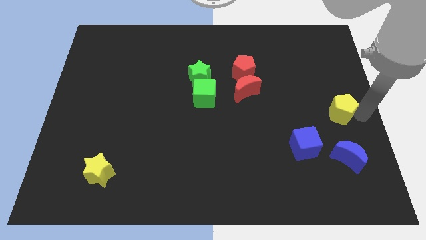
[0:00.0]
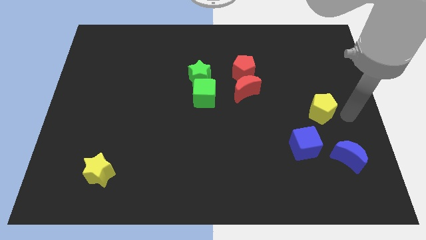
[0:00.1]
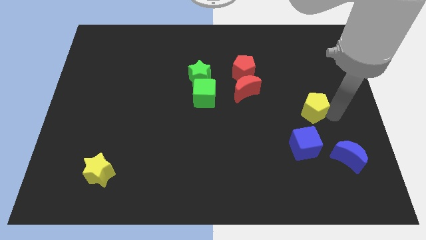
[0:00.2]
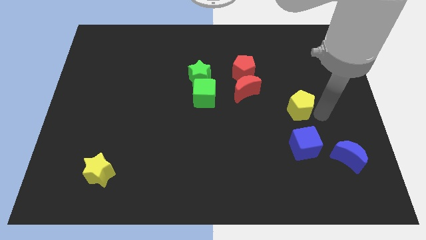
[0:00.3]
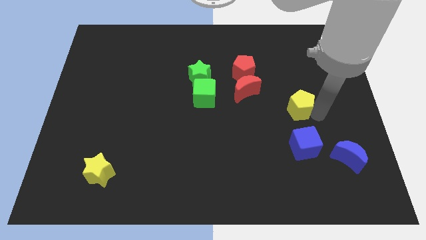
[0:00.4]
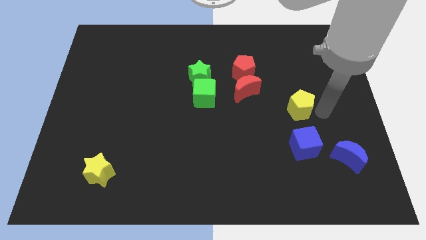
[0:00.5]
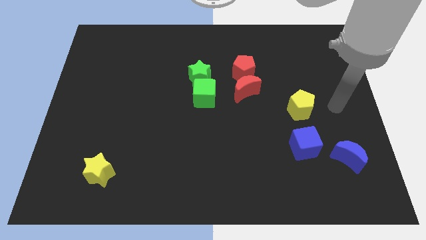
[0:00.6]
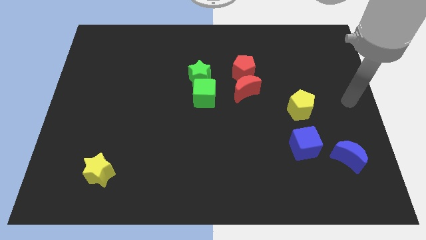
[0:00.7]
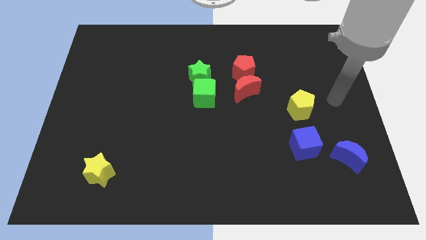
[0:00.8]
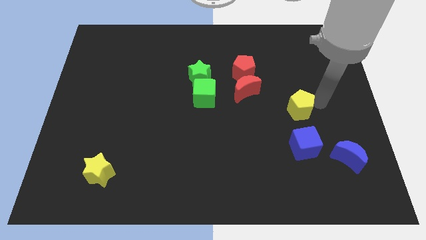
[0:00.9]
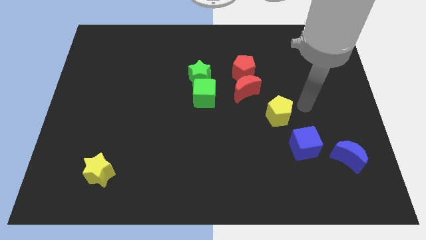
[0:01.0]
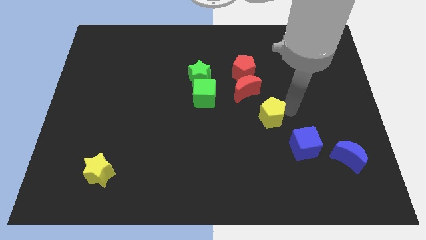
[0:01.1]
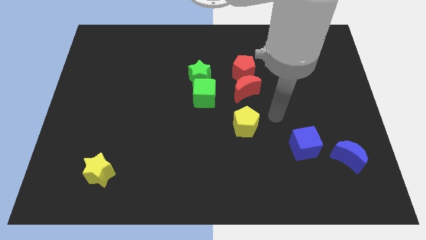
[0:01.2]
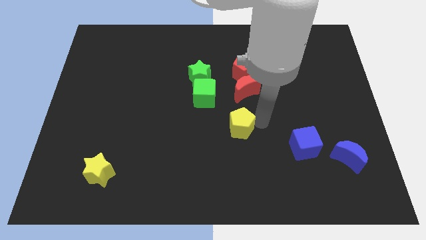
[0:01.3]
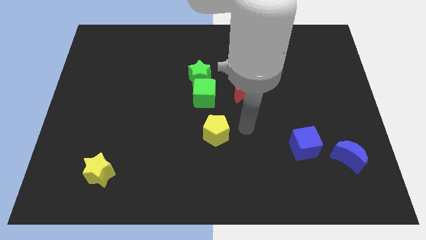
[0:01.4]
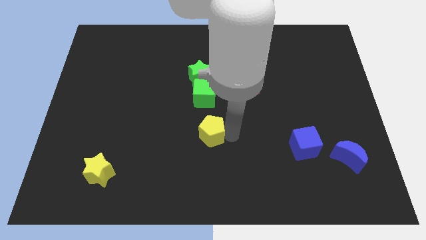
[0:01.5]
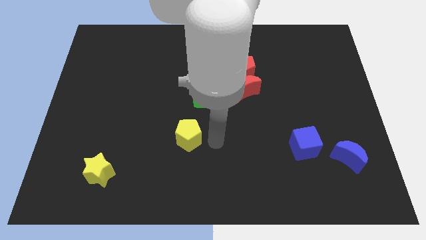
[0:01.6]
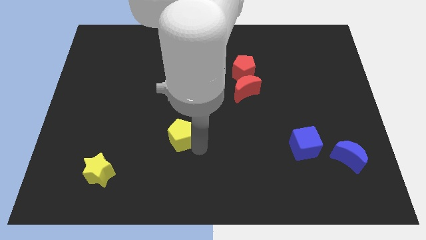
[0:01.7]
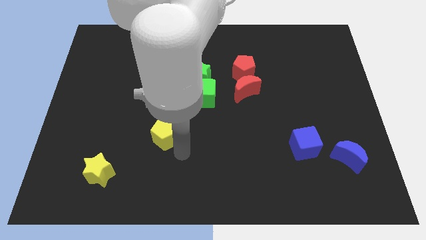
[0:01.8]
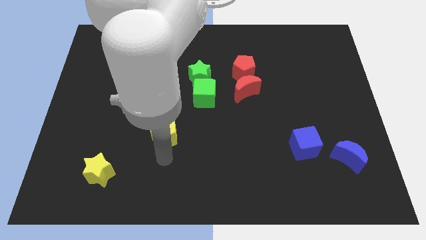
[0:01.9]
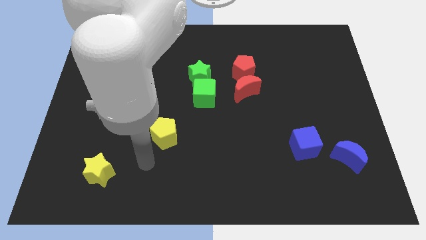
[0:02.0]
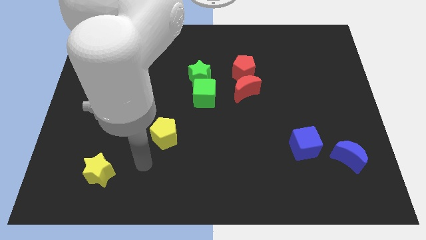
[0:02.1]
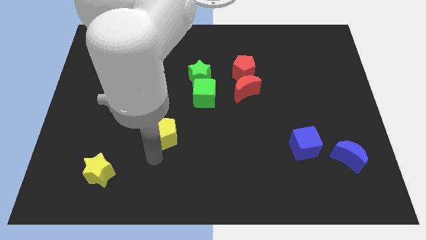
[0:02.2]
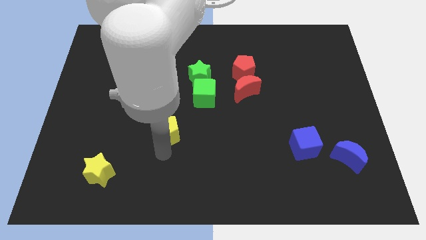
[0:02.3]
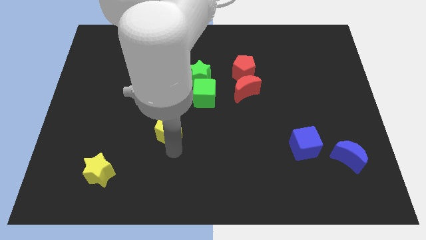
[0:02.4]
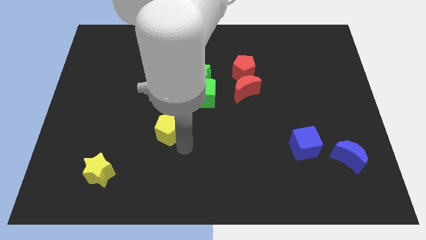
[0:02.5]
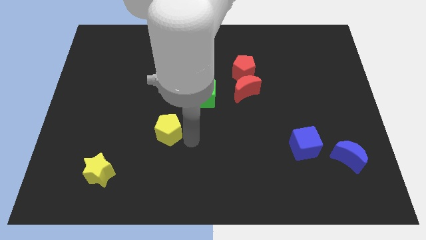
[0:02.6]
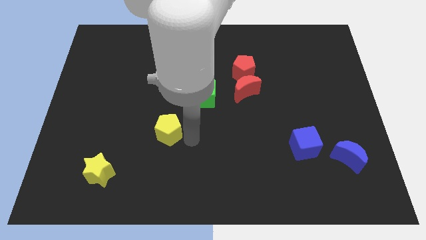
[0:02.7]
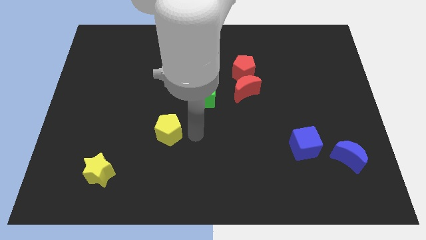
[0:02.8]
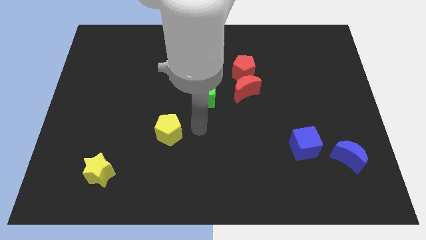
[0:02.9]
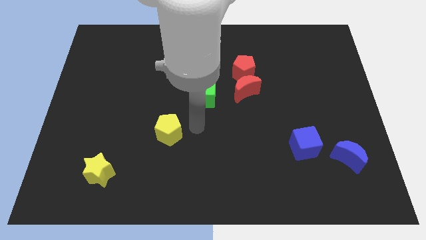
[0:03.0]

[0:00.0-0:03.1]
push yellow pentagon towards yellow star

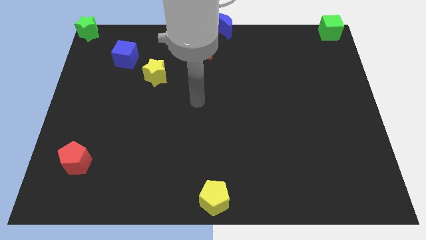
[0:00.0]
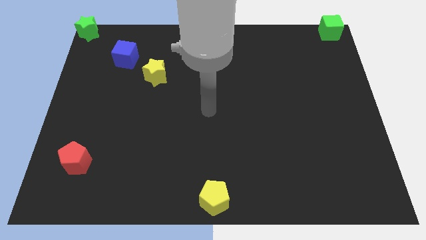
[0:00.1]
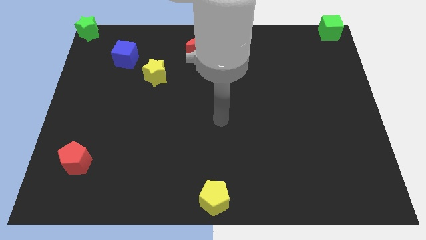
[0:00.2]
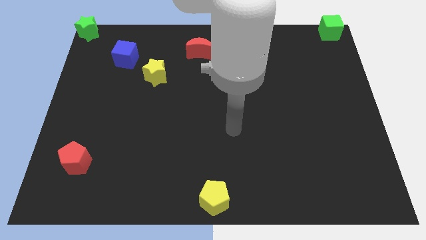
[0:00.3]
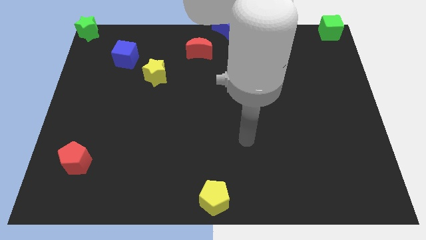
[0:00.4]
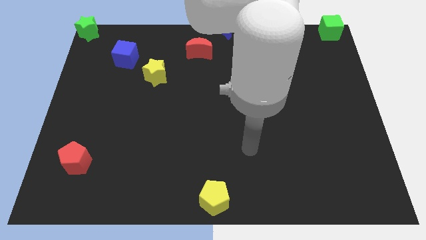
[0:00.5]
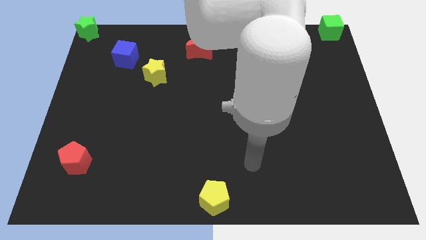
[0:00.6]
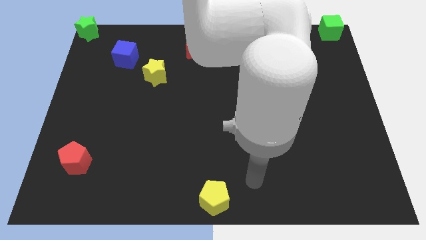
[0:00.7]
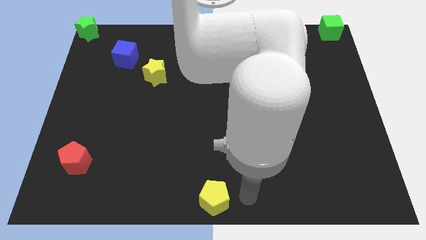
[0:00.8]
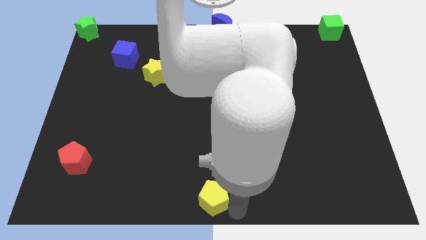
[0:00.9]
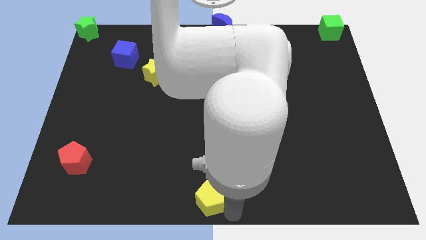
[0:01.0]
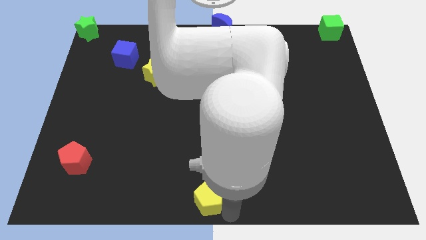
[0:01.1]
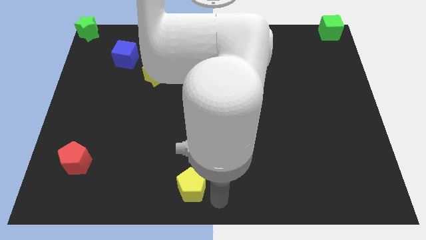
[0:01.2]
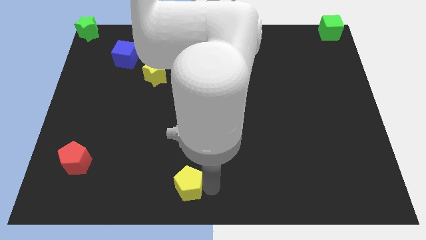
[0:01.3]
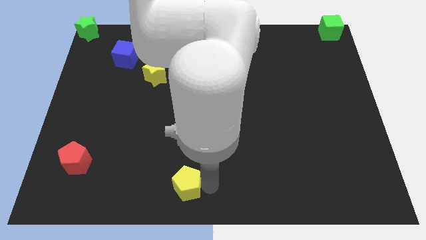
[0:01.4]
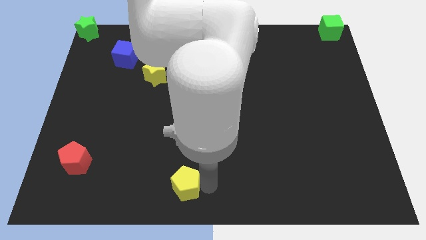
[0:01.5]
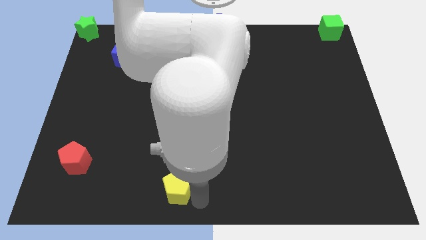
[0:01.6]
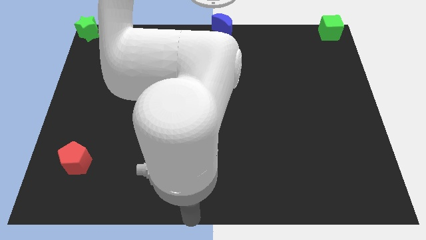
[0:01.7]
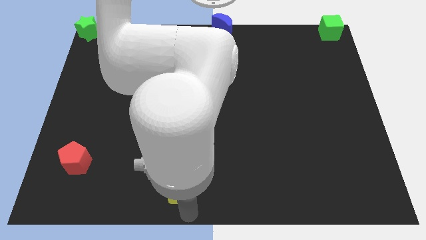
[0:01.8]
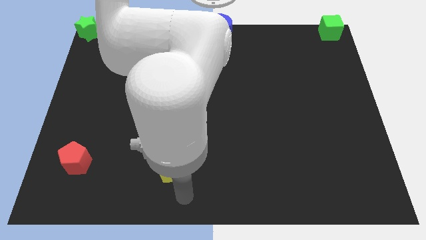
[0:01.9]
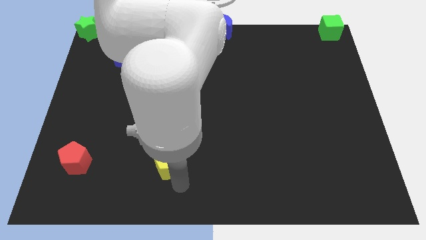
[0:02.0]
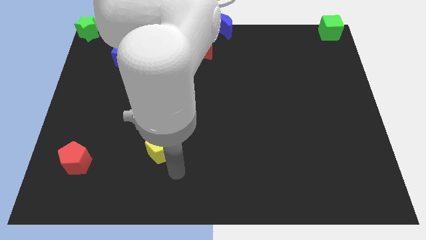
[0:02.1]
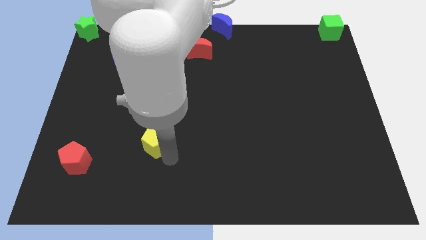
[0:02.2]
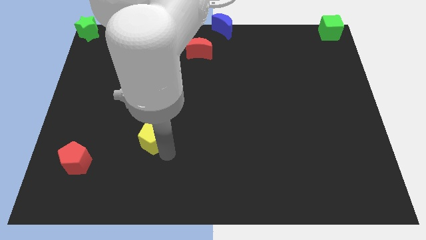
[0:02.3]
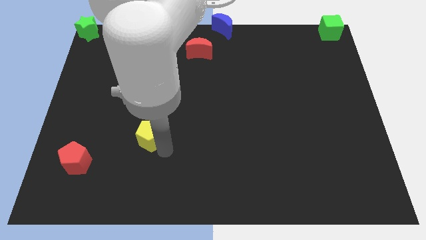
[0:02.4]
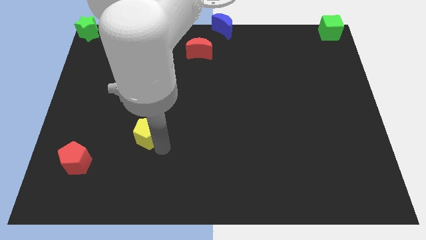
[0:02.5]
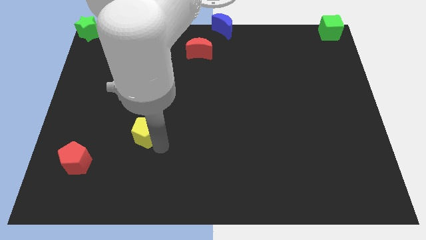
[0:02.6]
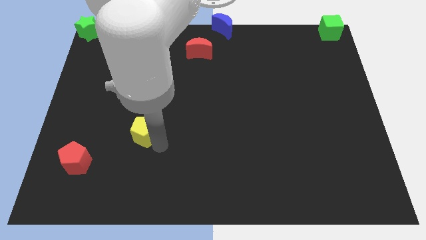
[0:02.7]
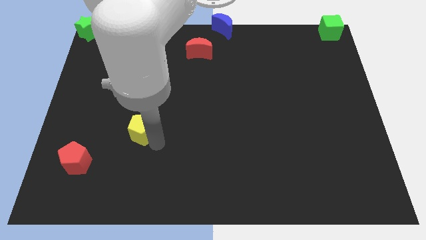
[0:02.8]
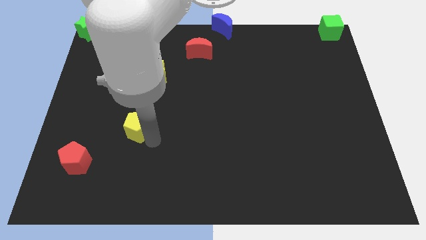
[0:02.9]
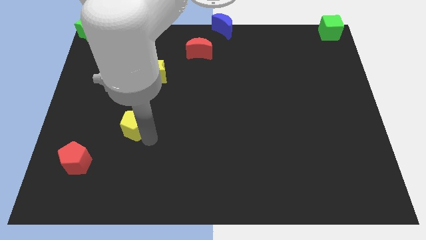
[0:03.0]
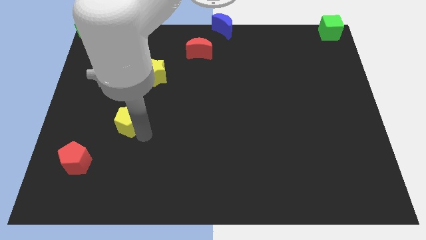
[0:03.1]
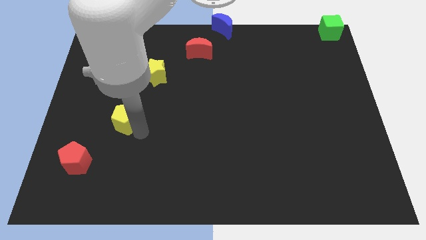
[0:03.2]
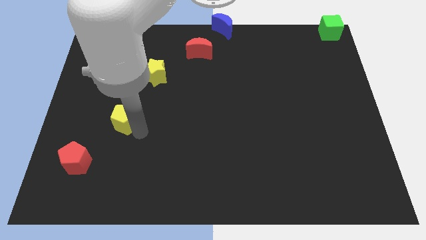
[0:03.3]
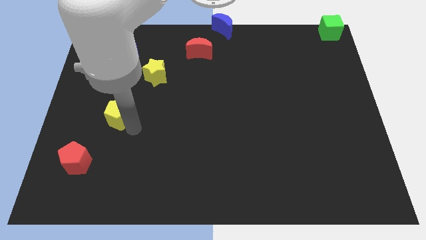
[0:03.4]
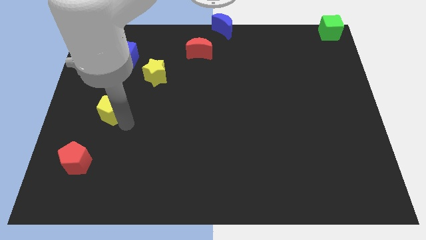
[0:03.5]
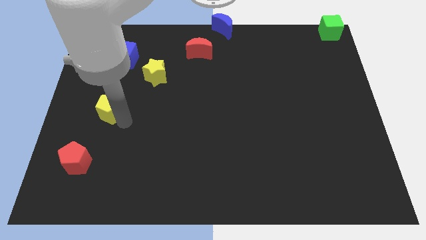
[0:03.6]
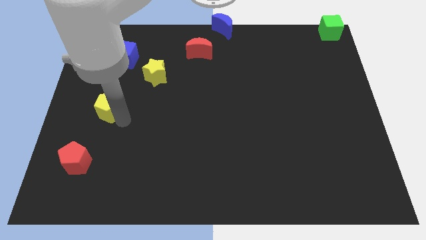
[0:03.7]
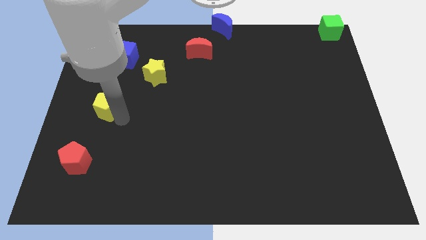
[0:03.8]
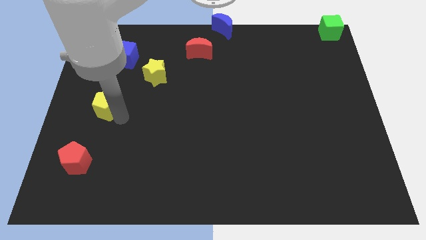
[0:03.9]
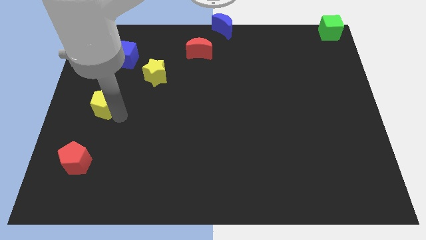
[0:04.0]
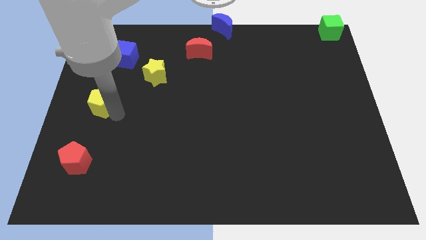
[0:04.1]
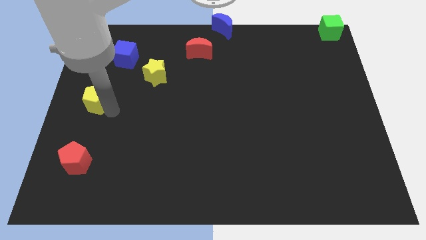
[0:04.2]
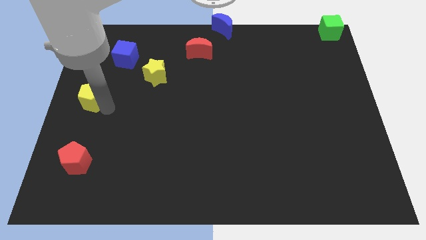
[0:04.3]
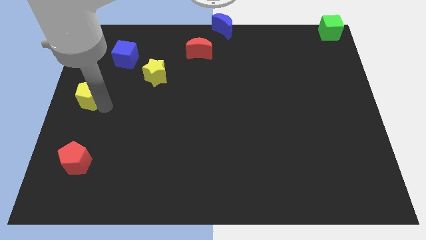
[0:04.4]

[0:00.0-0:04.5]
place the yellow pentagon above the red pentagon

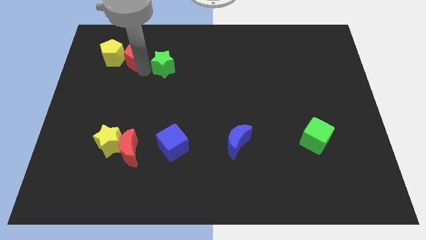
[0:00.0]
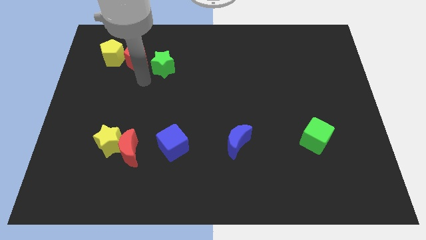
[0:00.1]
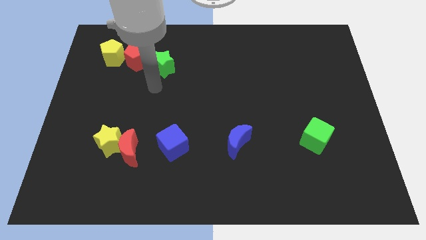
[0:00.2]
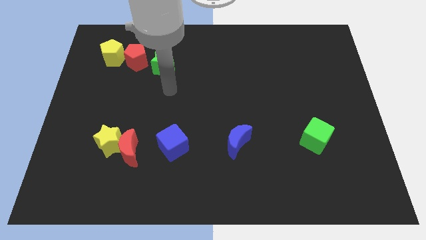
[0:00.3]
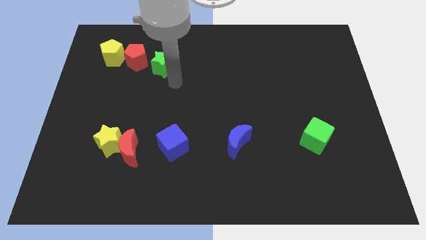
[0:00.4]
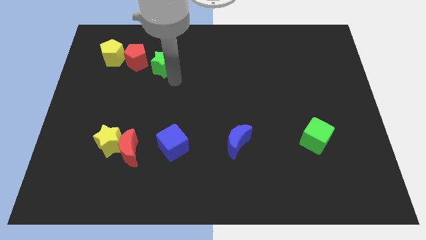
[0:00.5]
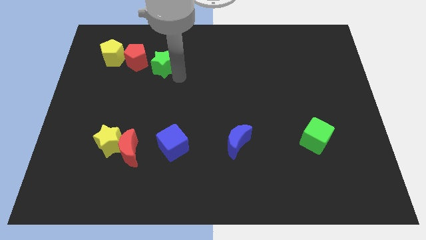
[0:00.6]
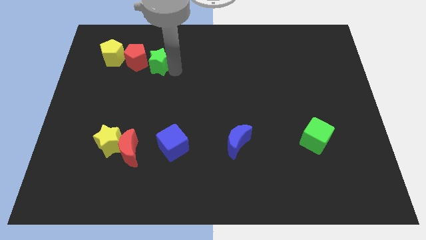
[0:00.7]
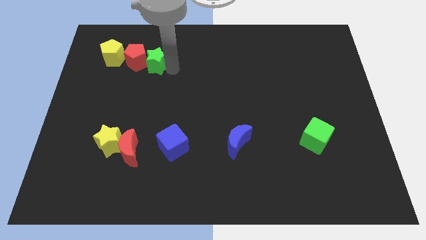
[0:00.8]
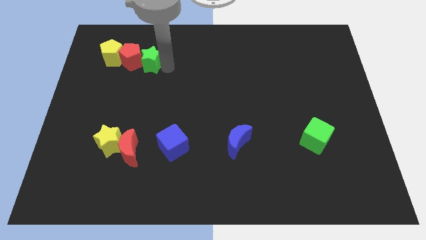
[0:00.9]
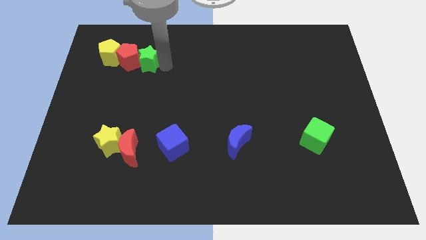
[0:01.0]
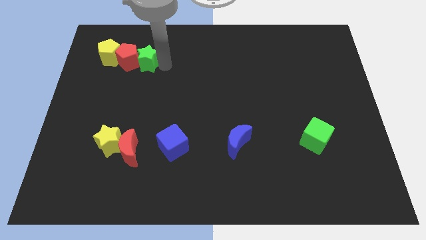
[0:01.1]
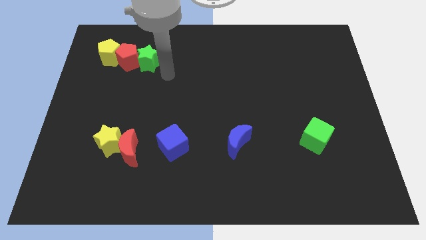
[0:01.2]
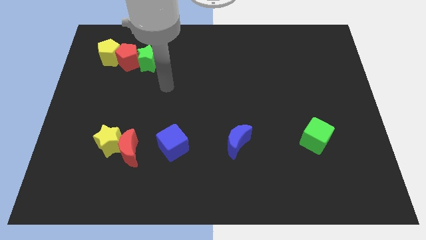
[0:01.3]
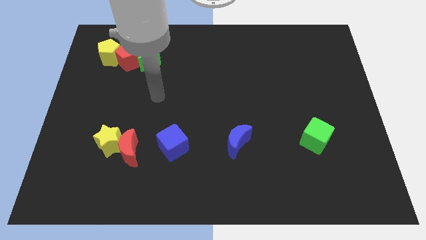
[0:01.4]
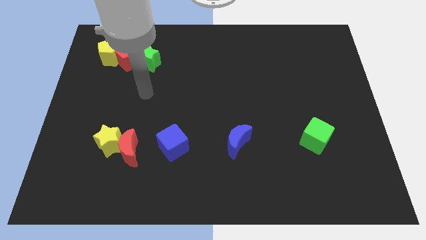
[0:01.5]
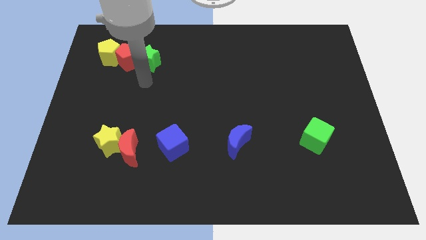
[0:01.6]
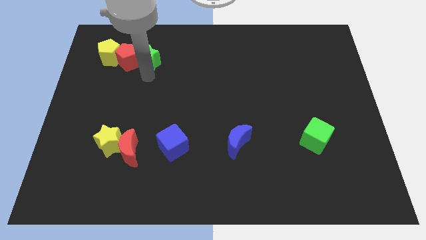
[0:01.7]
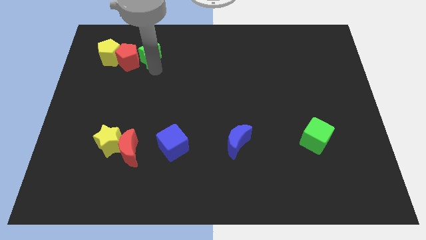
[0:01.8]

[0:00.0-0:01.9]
push the green star into red pentagon
